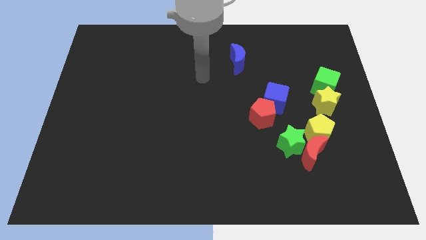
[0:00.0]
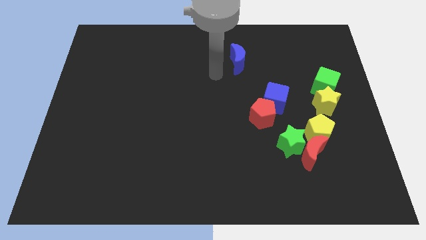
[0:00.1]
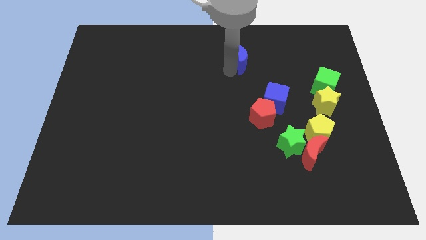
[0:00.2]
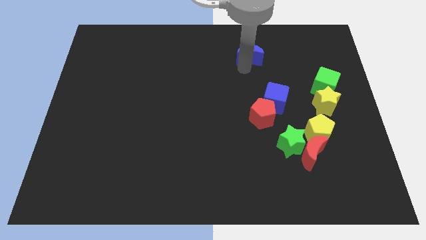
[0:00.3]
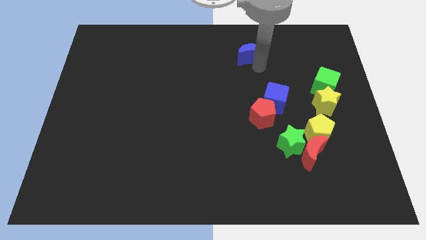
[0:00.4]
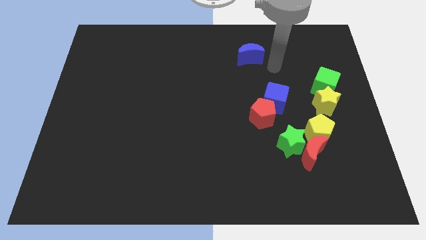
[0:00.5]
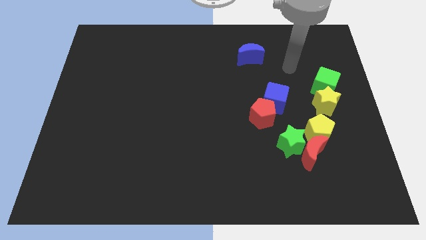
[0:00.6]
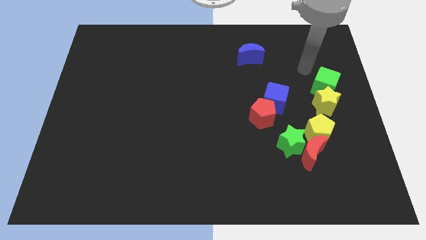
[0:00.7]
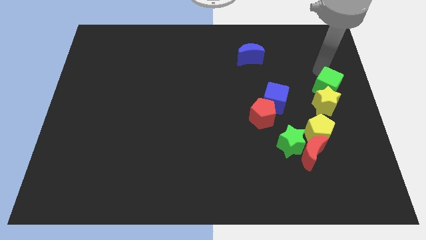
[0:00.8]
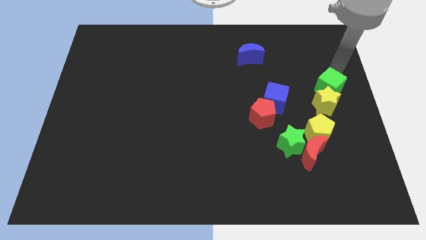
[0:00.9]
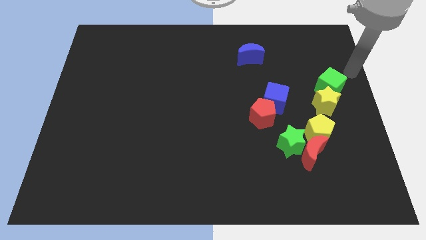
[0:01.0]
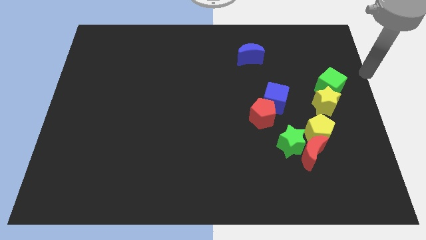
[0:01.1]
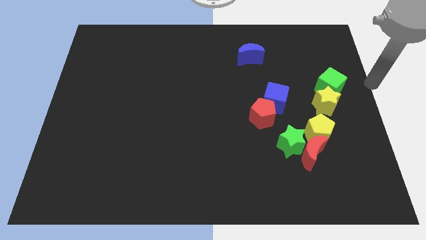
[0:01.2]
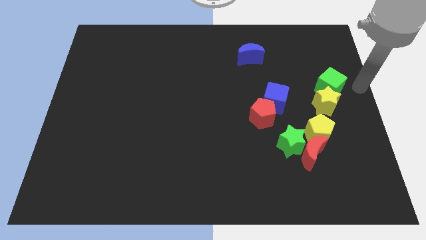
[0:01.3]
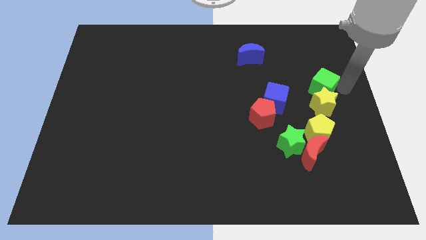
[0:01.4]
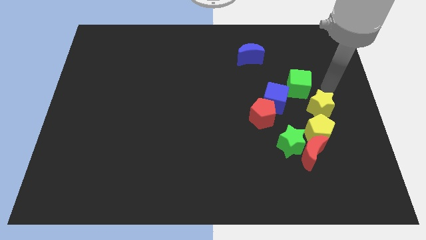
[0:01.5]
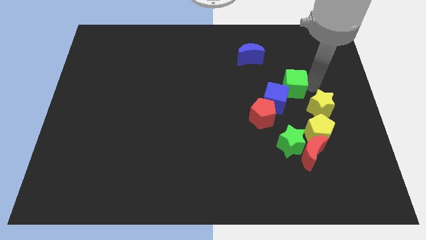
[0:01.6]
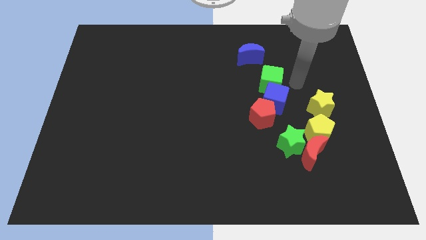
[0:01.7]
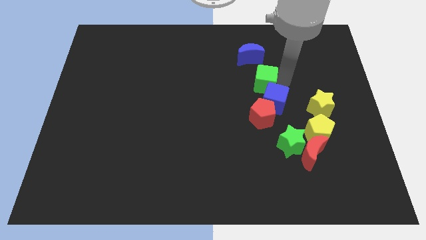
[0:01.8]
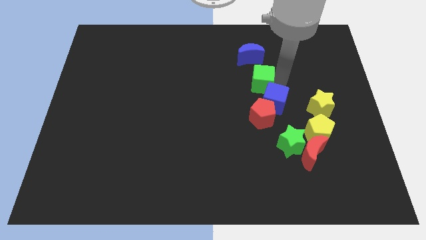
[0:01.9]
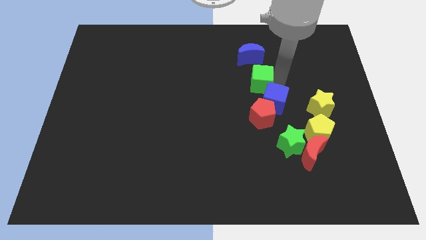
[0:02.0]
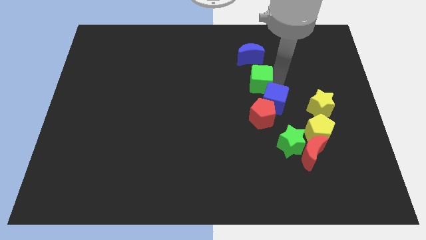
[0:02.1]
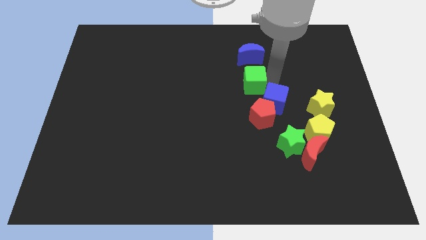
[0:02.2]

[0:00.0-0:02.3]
place the green cube vertically below the blue moon

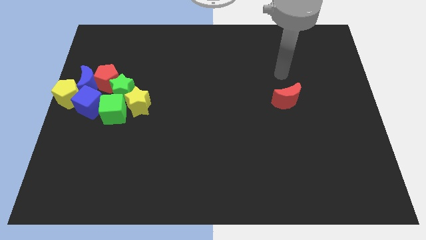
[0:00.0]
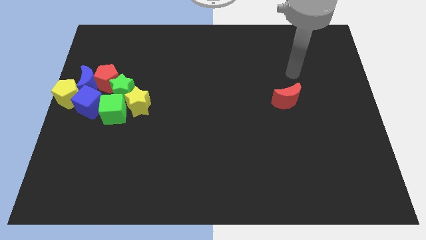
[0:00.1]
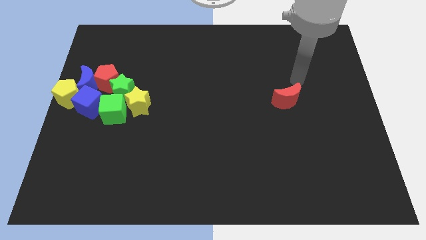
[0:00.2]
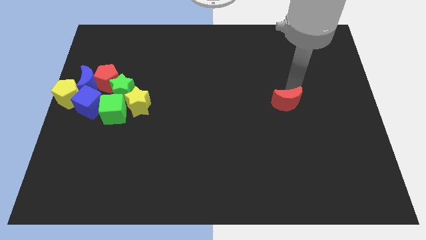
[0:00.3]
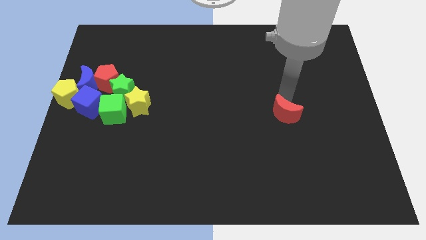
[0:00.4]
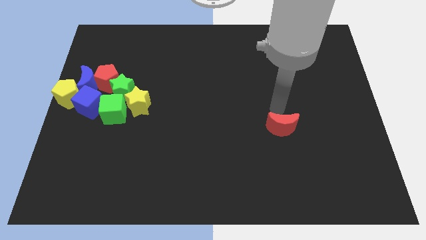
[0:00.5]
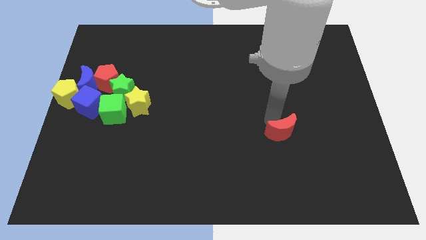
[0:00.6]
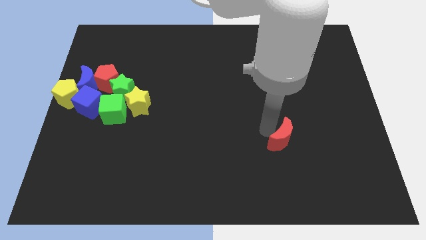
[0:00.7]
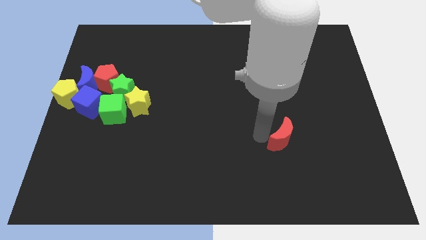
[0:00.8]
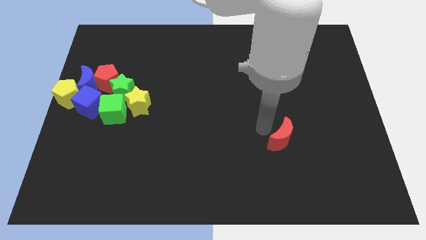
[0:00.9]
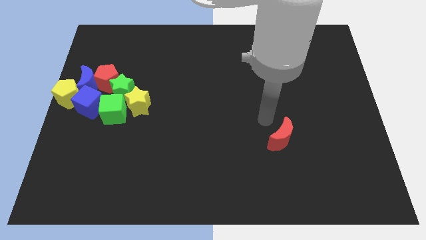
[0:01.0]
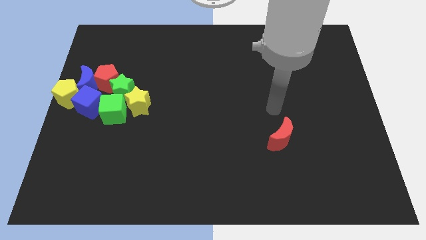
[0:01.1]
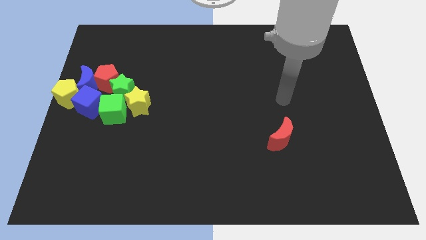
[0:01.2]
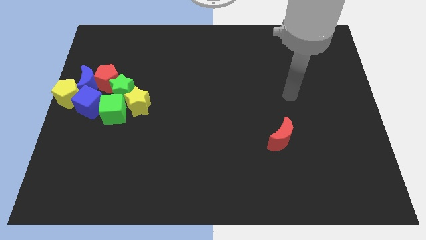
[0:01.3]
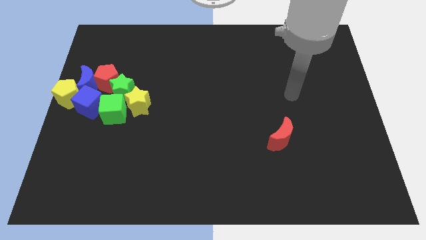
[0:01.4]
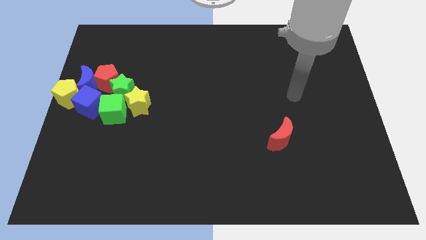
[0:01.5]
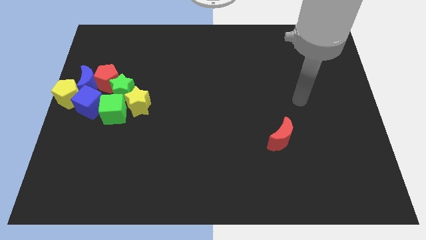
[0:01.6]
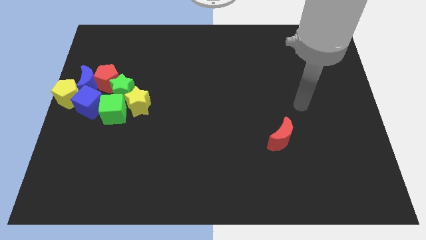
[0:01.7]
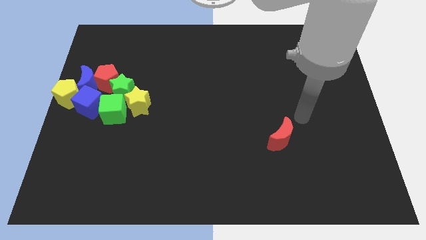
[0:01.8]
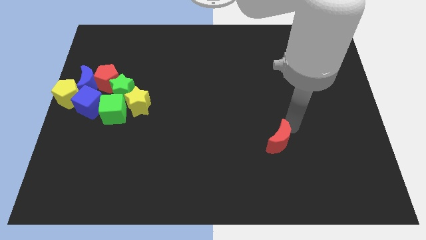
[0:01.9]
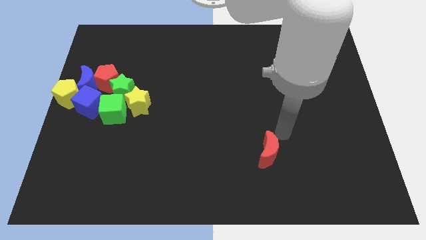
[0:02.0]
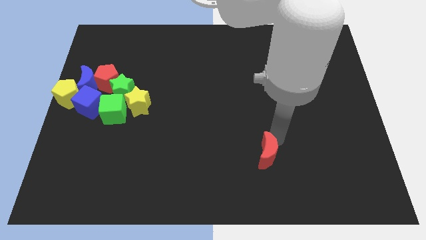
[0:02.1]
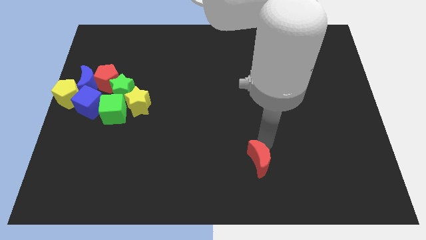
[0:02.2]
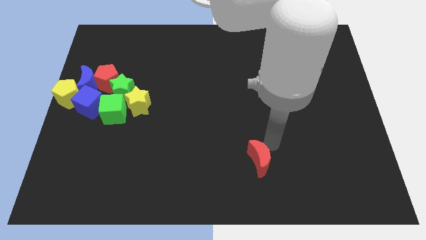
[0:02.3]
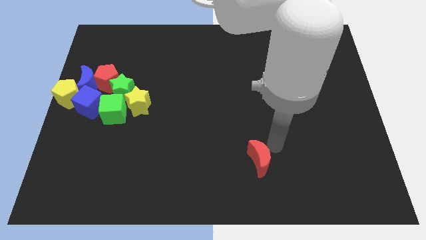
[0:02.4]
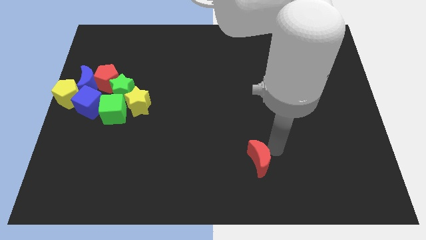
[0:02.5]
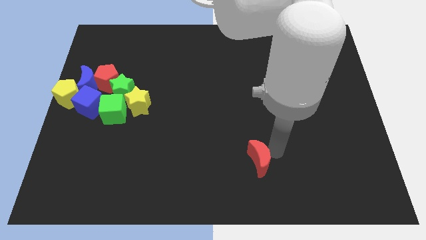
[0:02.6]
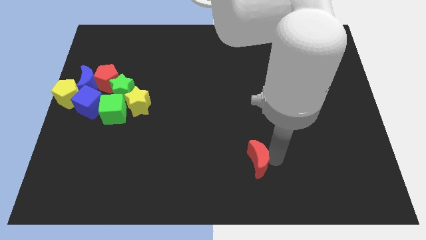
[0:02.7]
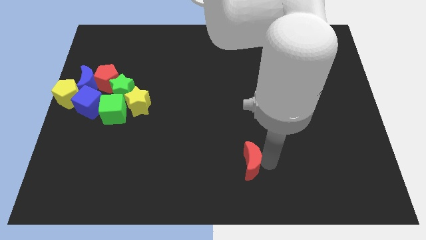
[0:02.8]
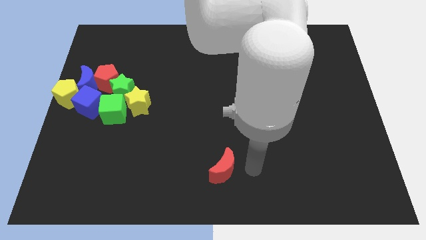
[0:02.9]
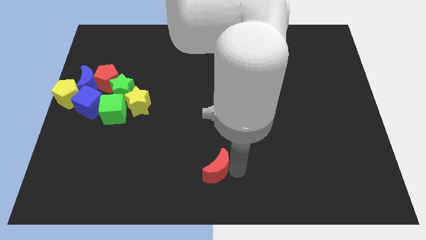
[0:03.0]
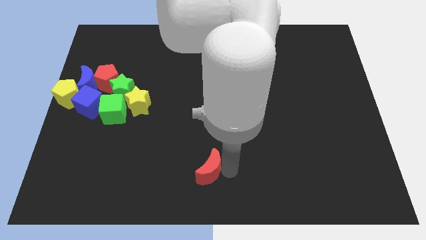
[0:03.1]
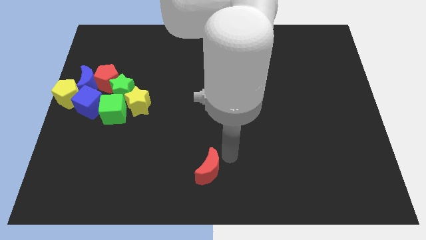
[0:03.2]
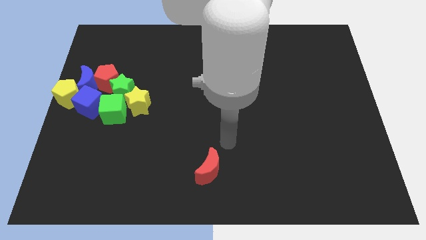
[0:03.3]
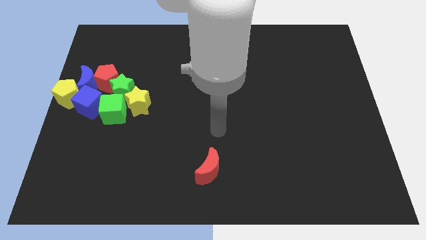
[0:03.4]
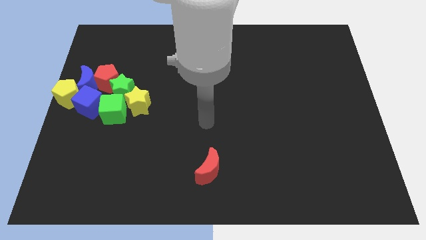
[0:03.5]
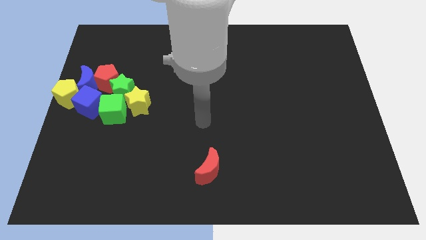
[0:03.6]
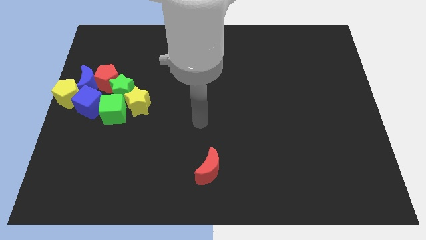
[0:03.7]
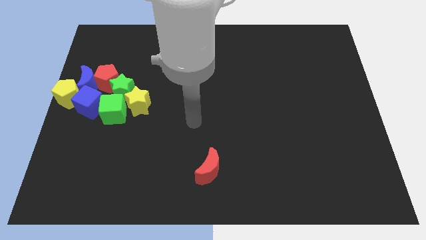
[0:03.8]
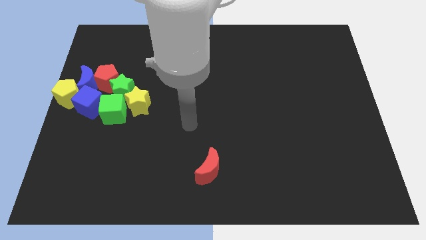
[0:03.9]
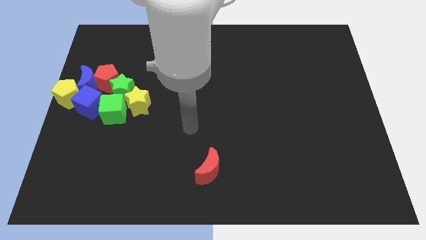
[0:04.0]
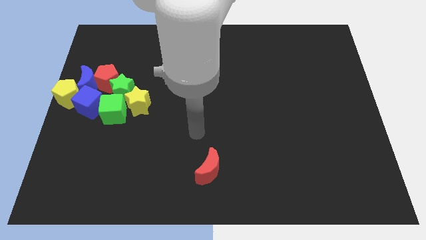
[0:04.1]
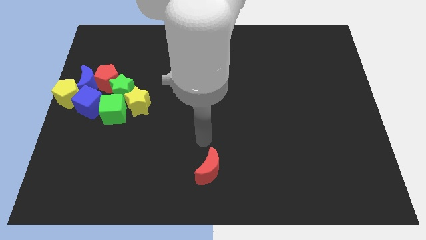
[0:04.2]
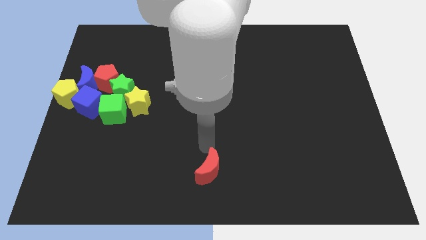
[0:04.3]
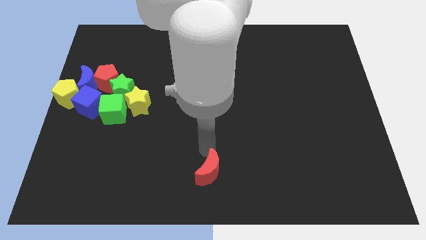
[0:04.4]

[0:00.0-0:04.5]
push the red crescent towards the bottom center side of the board

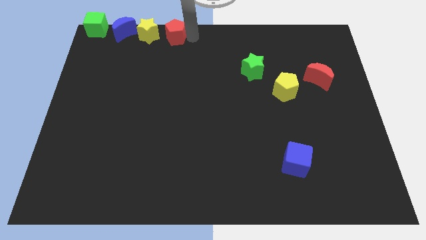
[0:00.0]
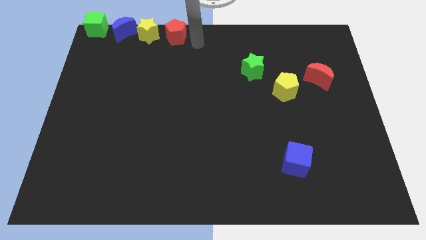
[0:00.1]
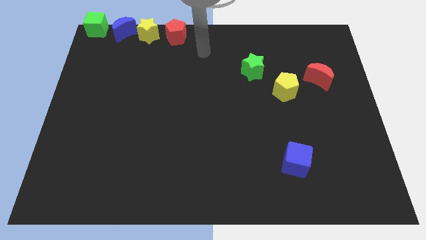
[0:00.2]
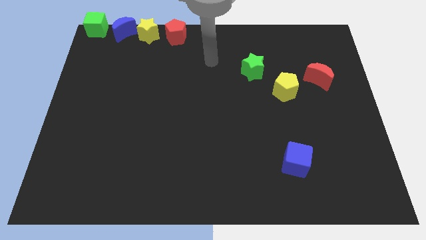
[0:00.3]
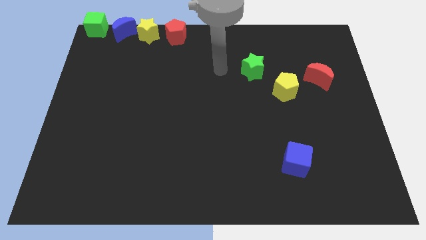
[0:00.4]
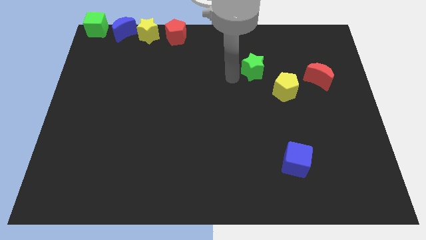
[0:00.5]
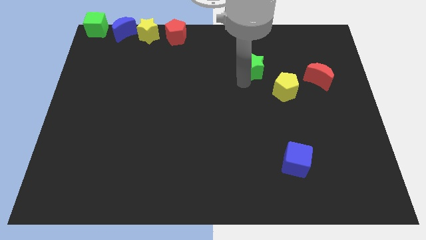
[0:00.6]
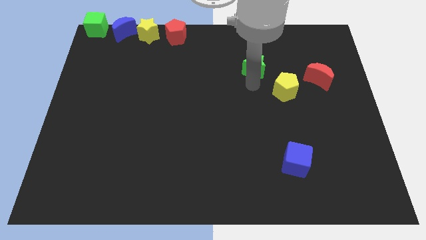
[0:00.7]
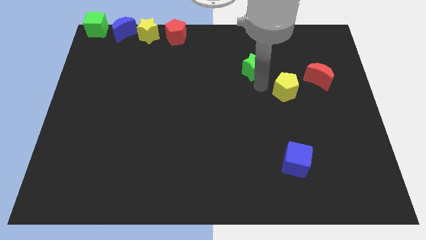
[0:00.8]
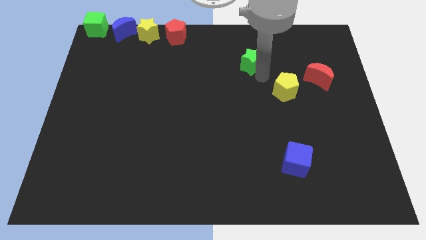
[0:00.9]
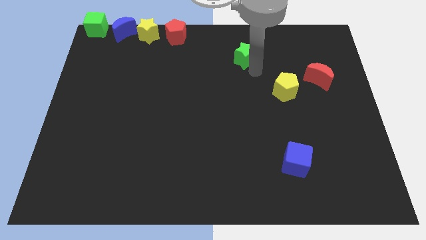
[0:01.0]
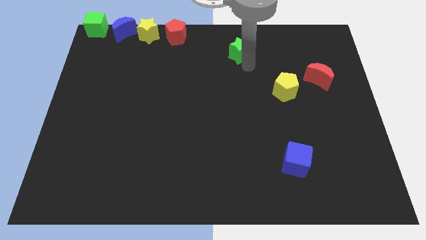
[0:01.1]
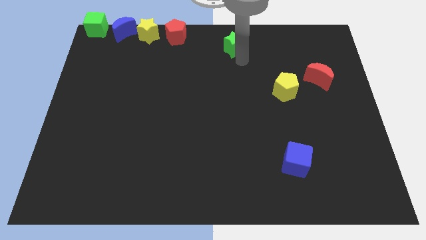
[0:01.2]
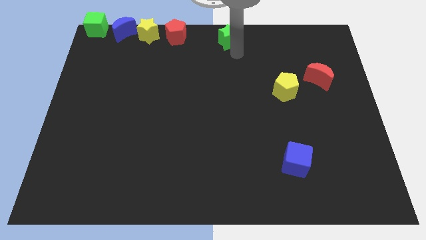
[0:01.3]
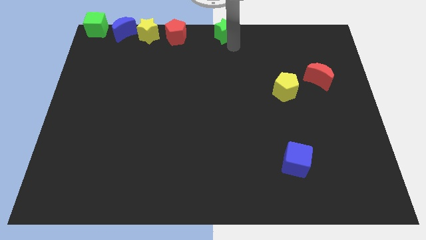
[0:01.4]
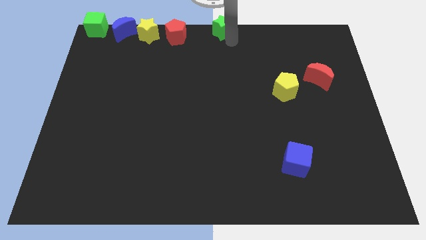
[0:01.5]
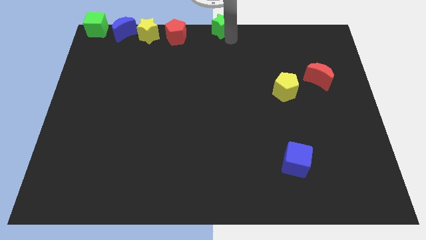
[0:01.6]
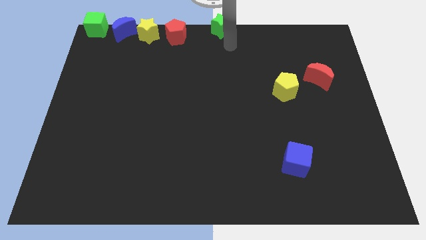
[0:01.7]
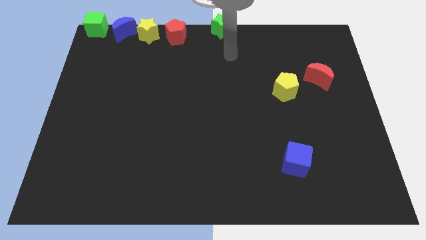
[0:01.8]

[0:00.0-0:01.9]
put the green star at the top center

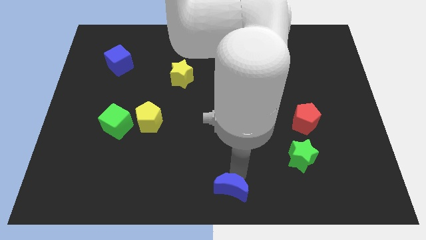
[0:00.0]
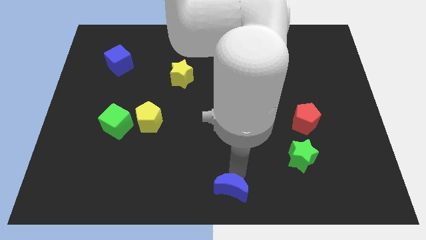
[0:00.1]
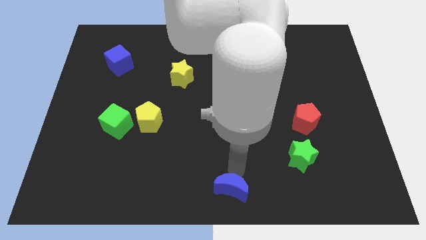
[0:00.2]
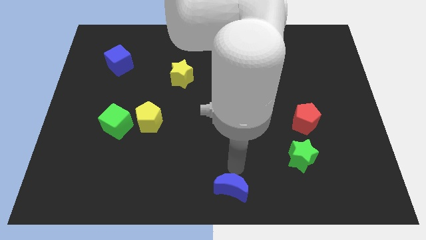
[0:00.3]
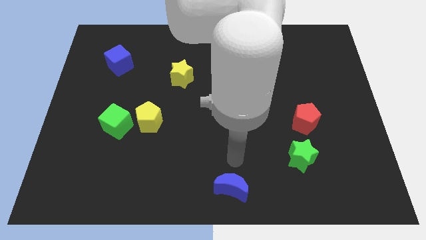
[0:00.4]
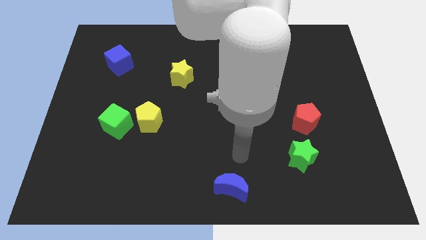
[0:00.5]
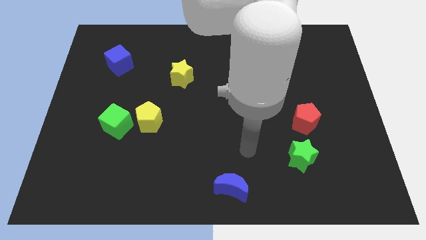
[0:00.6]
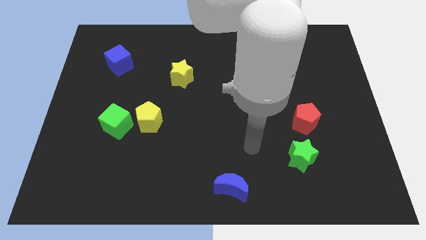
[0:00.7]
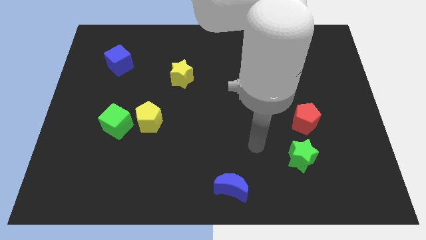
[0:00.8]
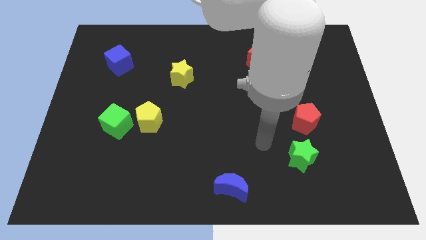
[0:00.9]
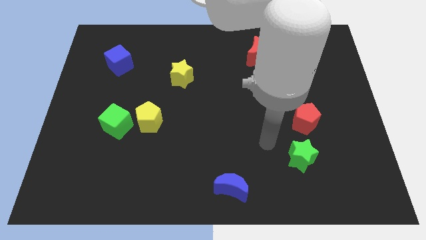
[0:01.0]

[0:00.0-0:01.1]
move your arm away from blue crescent
